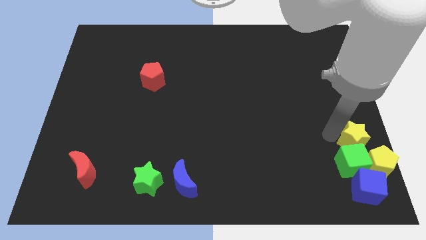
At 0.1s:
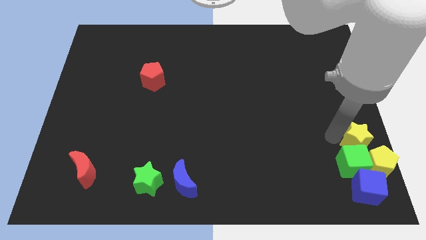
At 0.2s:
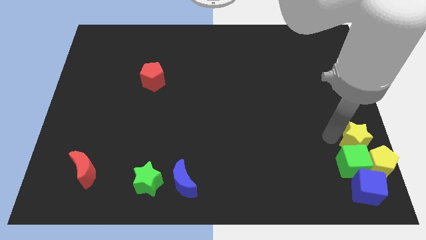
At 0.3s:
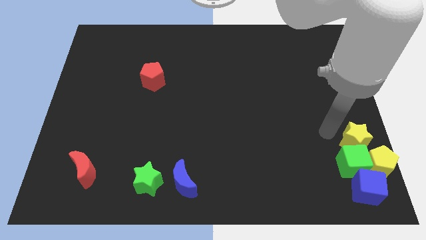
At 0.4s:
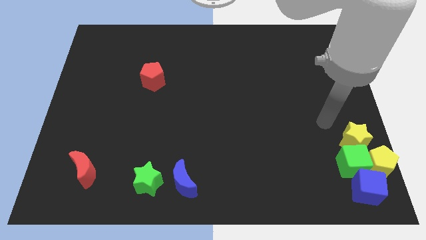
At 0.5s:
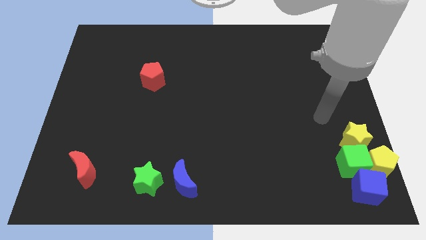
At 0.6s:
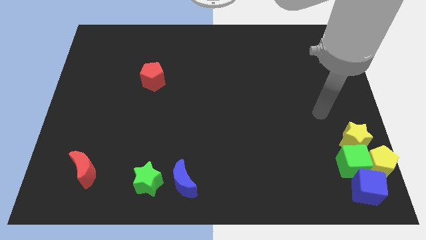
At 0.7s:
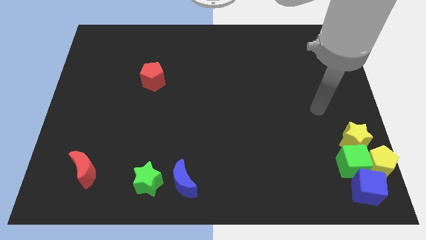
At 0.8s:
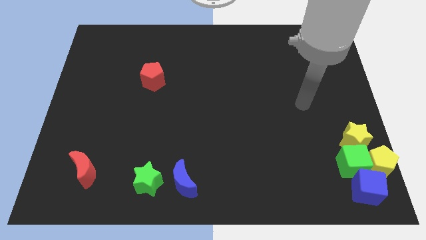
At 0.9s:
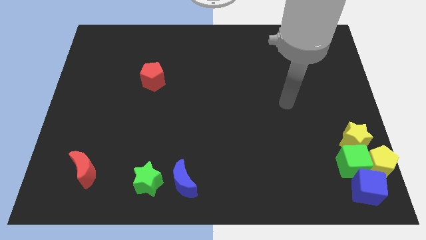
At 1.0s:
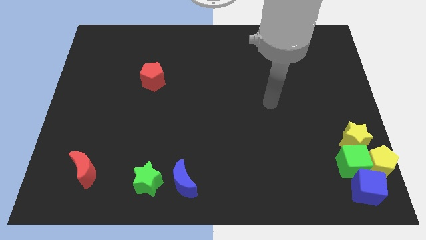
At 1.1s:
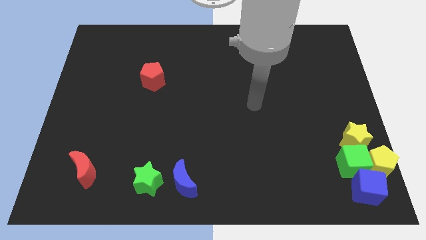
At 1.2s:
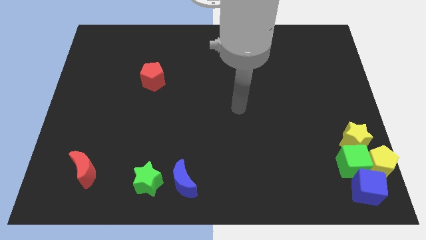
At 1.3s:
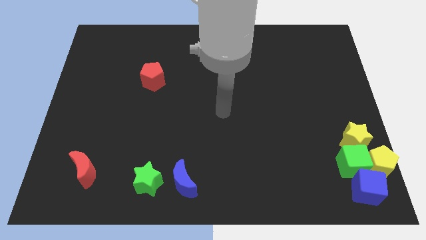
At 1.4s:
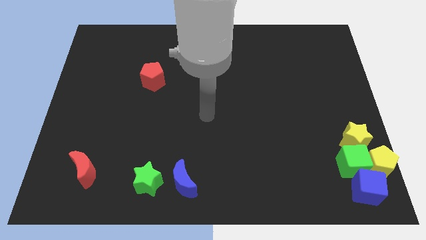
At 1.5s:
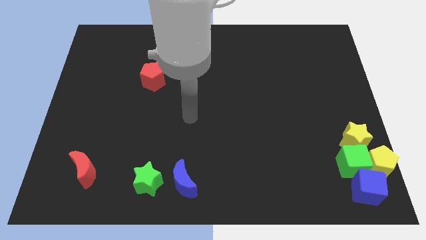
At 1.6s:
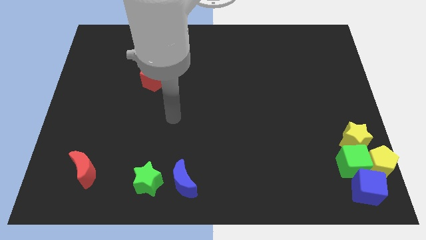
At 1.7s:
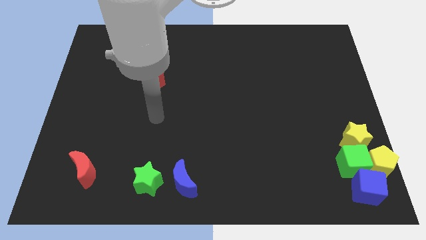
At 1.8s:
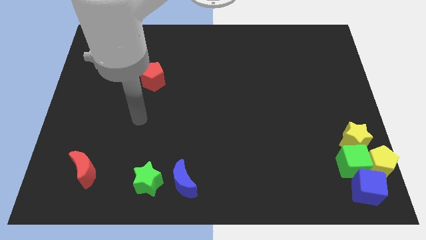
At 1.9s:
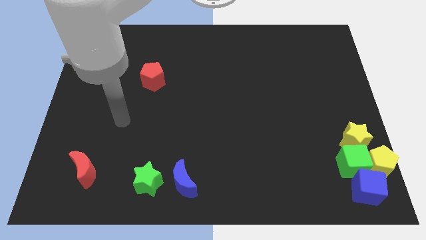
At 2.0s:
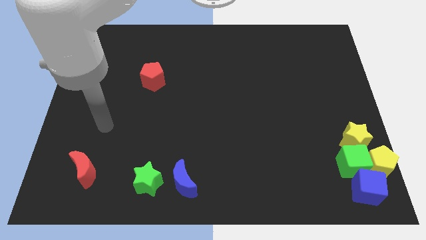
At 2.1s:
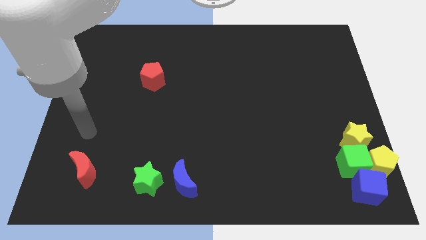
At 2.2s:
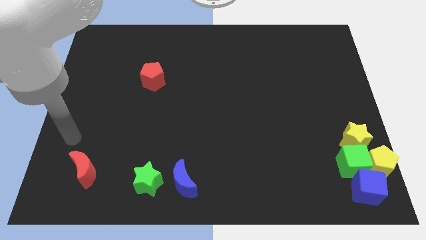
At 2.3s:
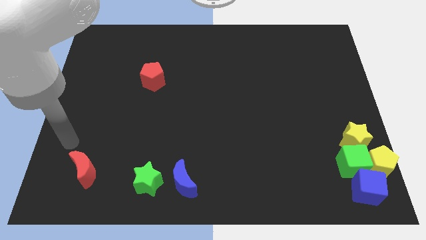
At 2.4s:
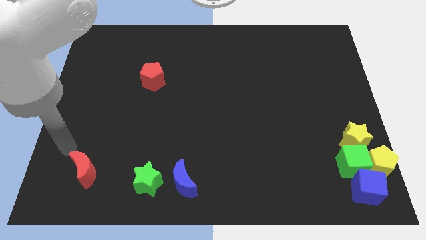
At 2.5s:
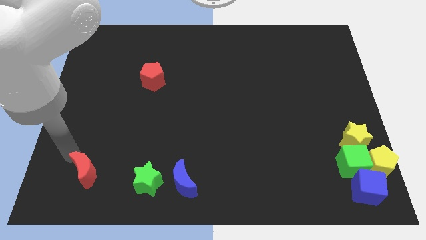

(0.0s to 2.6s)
place the arm near the red moon

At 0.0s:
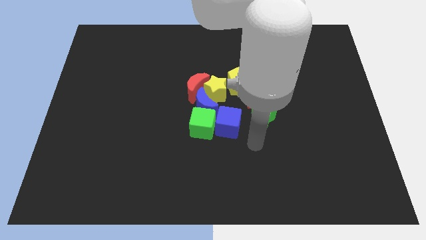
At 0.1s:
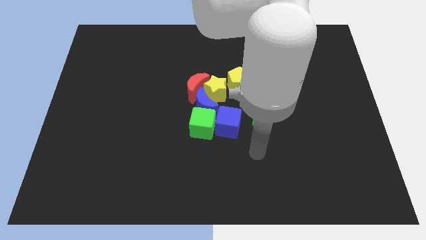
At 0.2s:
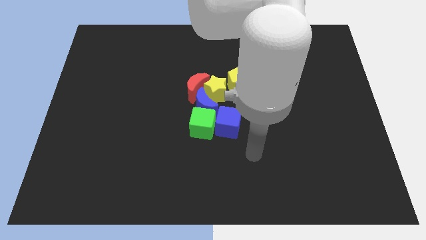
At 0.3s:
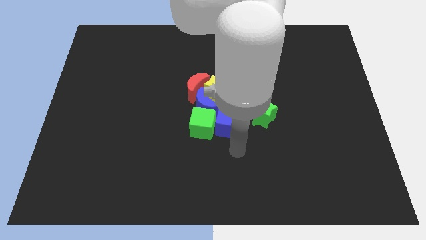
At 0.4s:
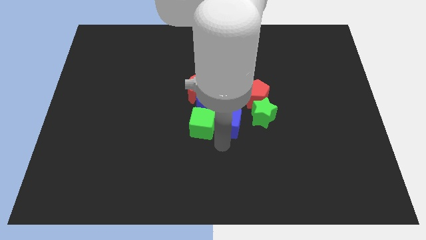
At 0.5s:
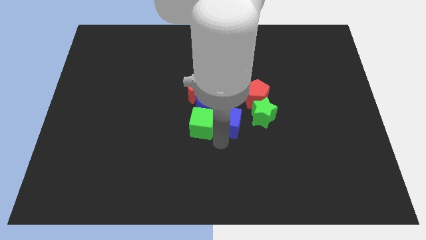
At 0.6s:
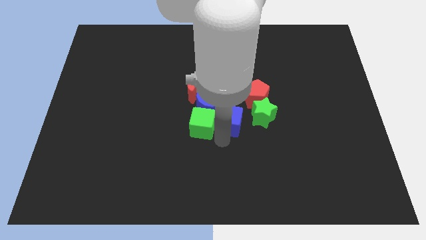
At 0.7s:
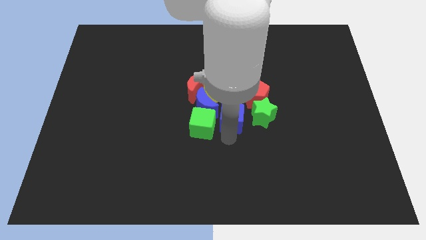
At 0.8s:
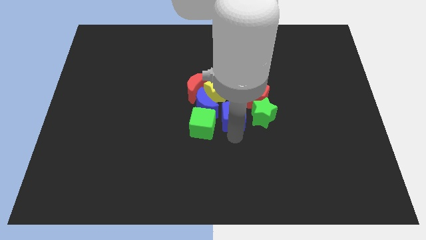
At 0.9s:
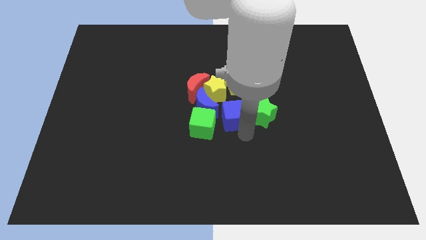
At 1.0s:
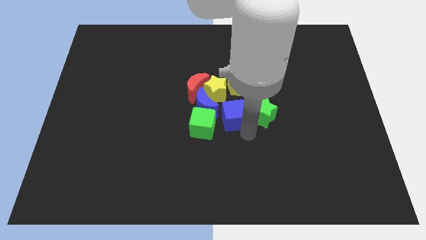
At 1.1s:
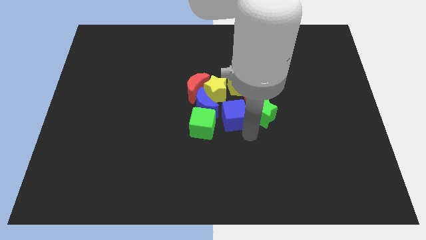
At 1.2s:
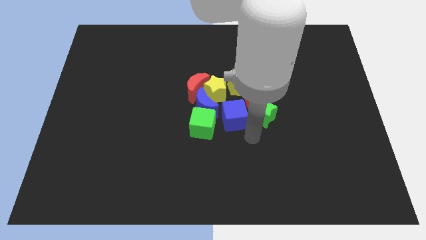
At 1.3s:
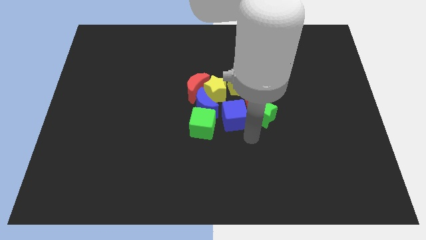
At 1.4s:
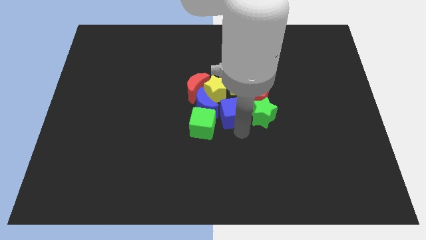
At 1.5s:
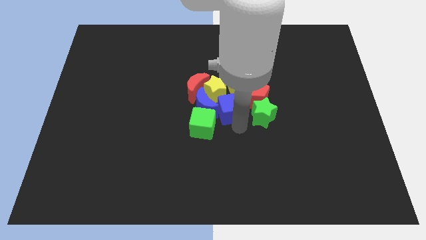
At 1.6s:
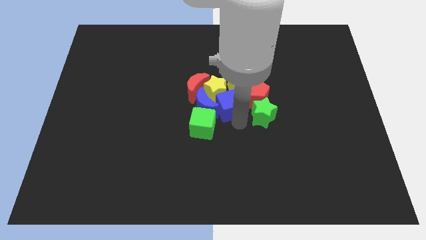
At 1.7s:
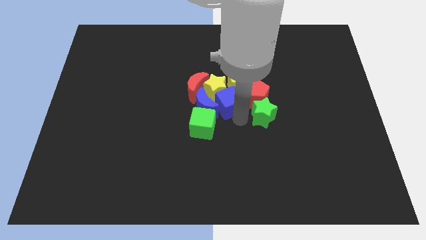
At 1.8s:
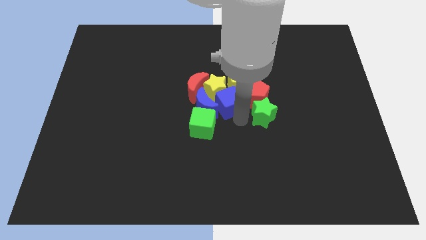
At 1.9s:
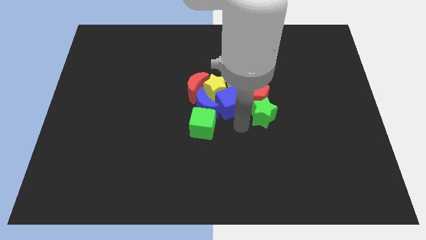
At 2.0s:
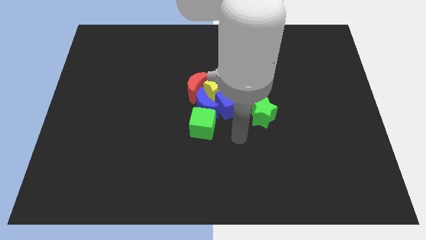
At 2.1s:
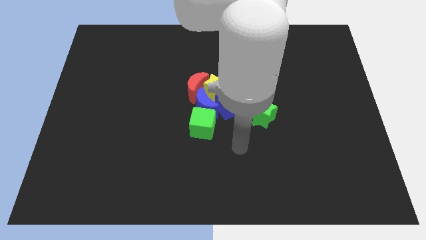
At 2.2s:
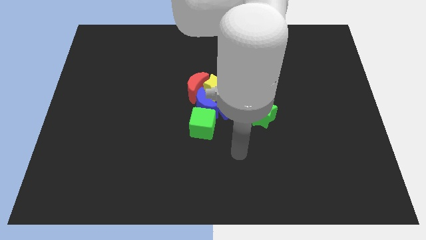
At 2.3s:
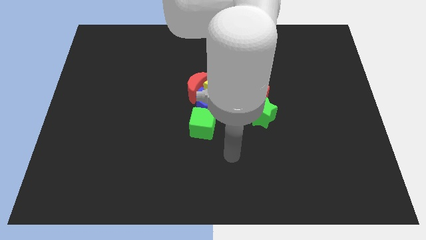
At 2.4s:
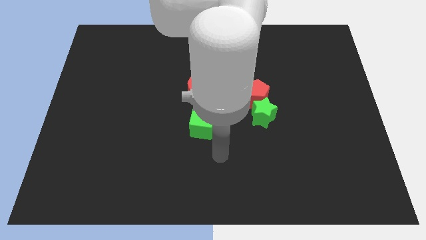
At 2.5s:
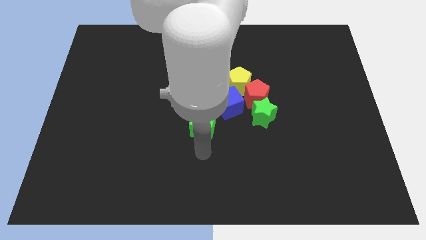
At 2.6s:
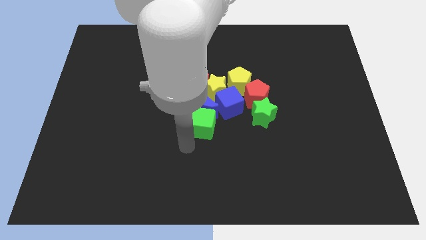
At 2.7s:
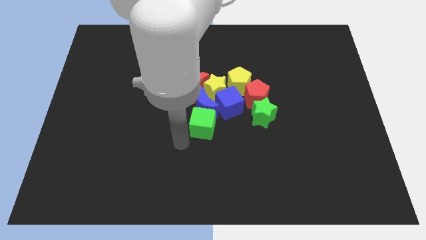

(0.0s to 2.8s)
push the blue cube into the bottom side of the yellow blocks

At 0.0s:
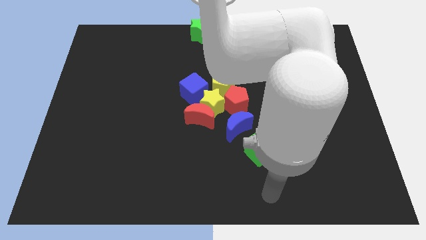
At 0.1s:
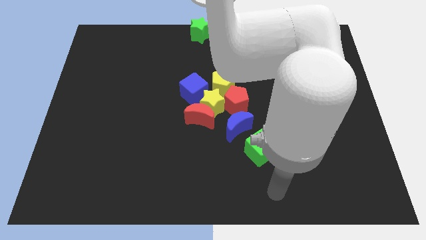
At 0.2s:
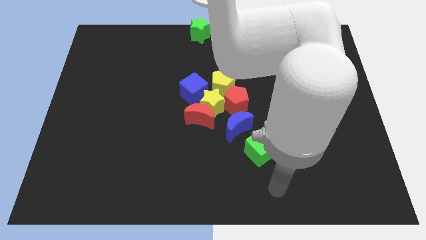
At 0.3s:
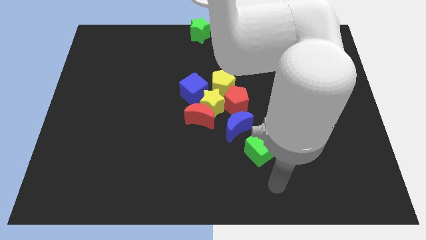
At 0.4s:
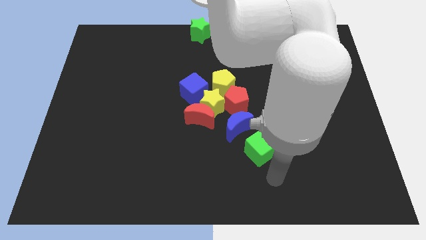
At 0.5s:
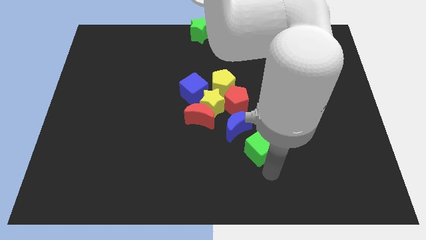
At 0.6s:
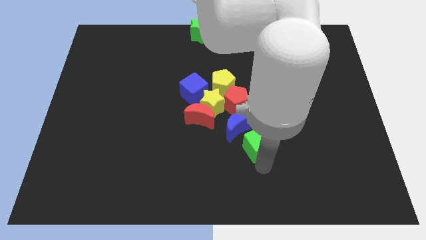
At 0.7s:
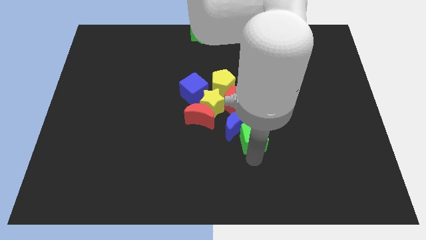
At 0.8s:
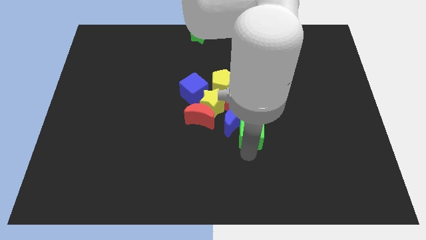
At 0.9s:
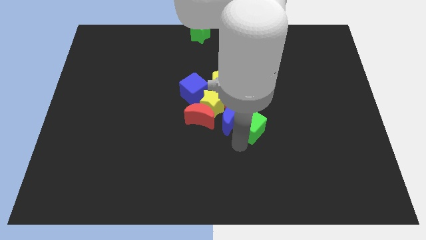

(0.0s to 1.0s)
move the green cube below the blue crescent

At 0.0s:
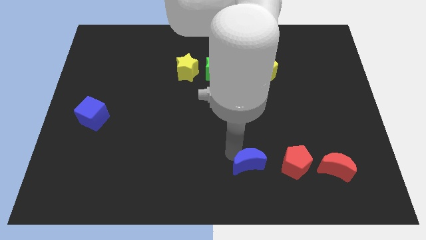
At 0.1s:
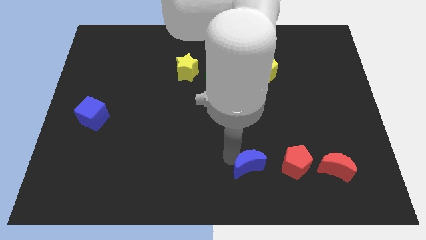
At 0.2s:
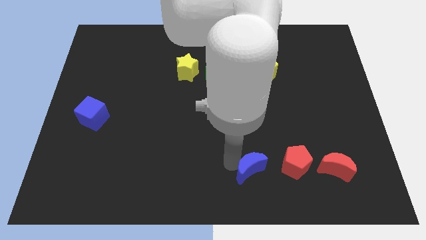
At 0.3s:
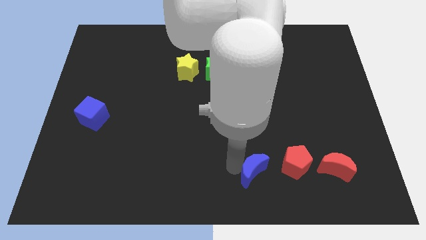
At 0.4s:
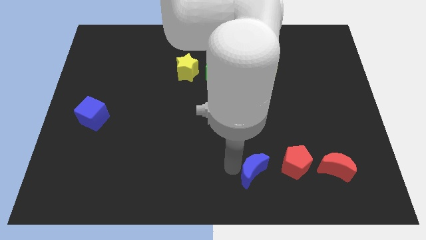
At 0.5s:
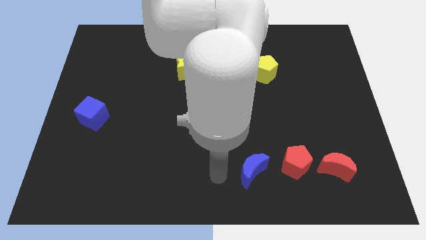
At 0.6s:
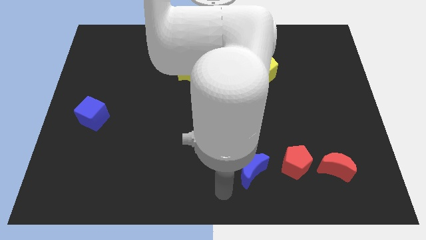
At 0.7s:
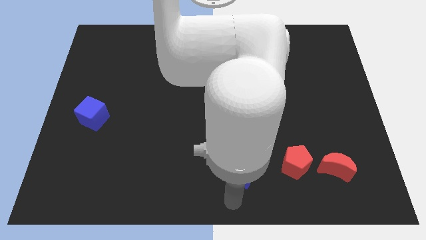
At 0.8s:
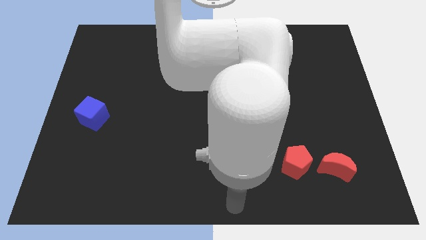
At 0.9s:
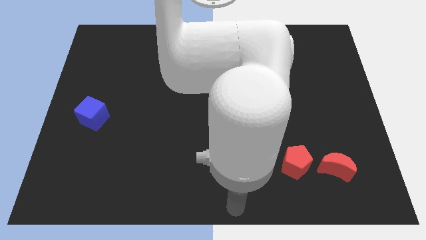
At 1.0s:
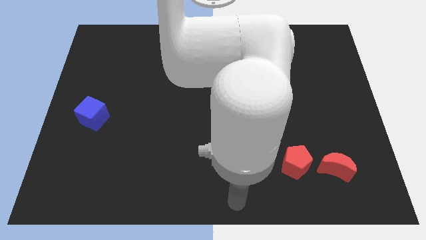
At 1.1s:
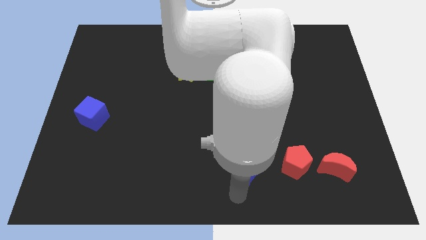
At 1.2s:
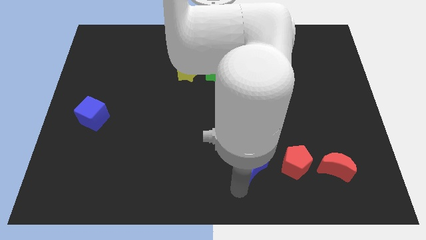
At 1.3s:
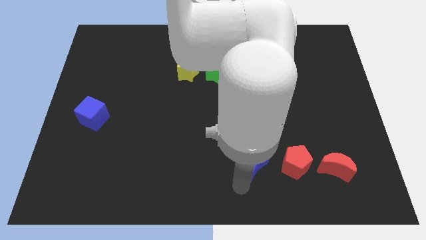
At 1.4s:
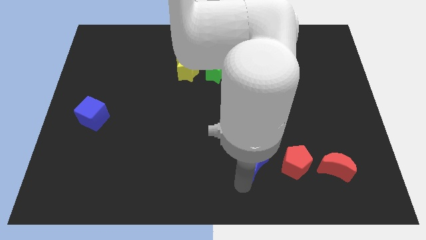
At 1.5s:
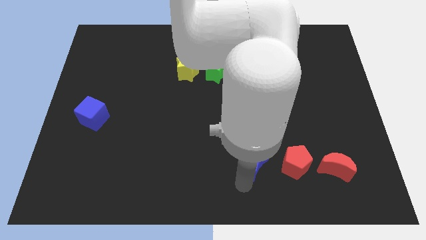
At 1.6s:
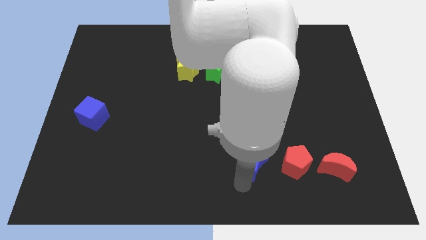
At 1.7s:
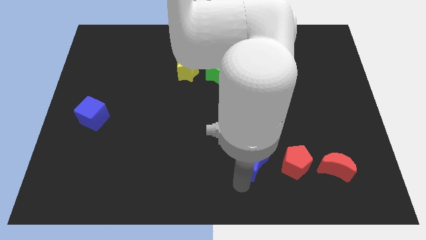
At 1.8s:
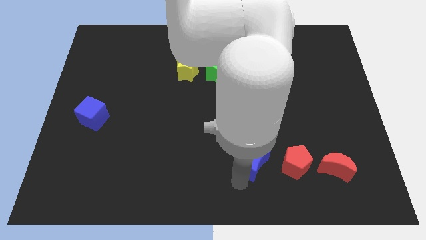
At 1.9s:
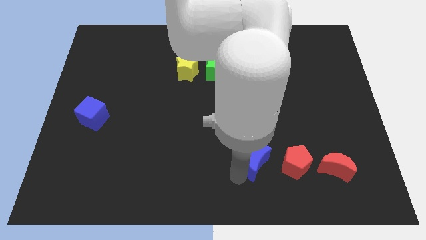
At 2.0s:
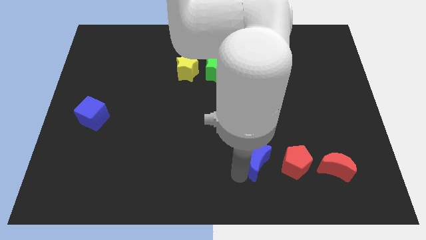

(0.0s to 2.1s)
slightly push the blue crescent to the right

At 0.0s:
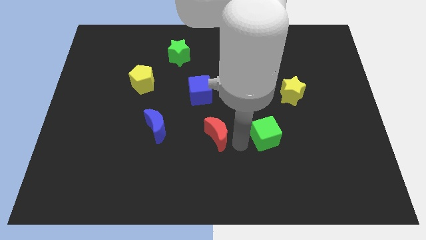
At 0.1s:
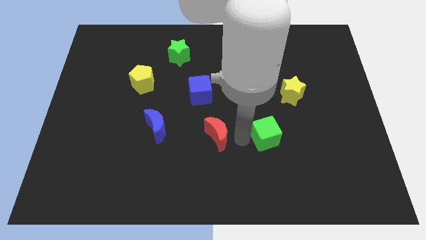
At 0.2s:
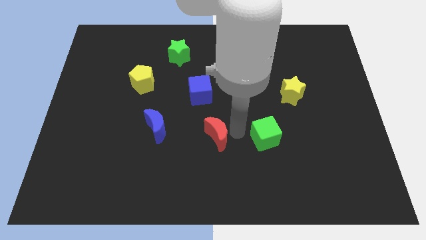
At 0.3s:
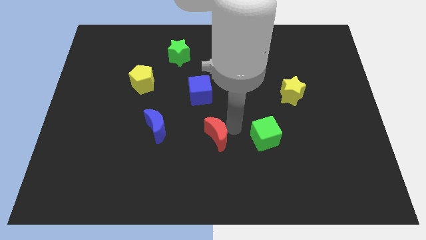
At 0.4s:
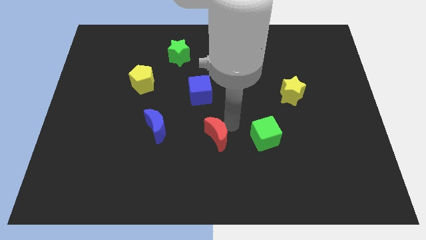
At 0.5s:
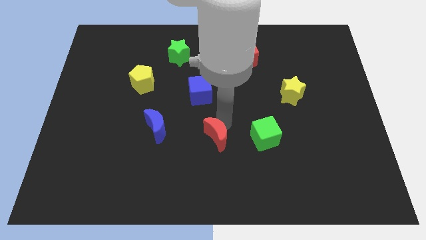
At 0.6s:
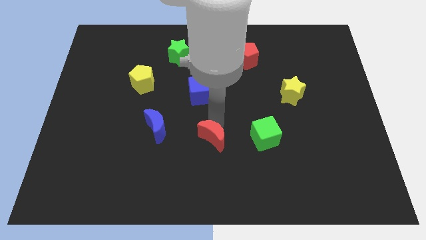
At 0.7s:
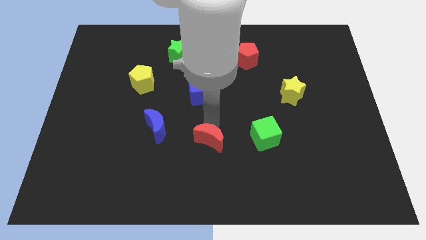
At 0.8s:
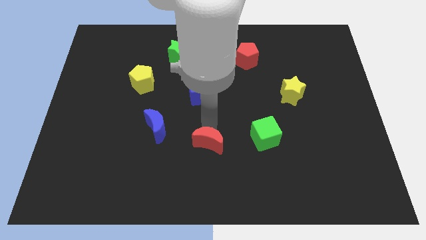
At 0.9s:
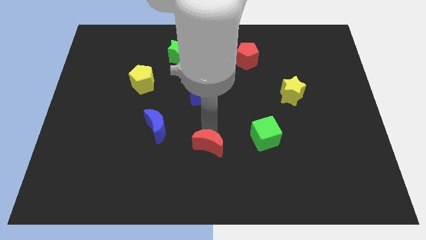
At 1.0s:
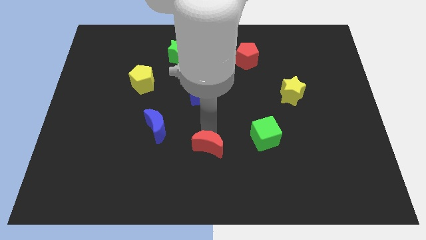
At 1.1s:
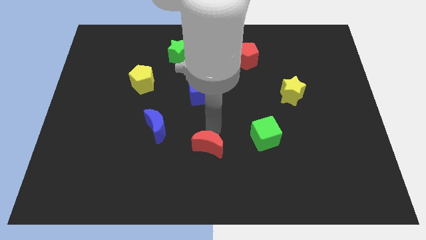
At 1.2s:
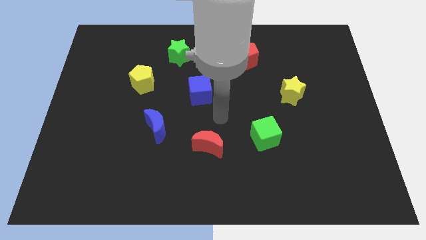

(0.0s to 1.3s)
put the red crescent vertically below the blue cube
